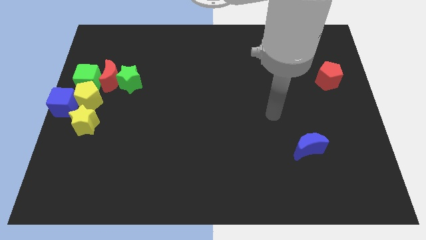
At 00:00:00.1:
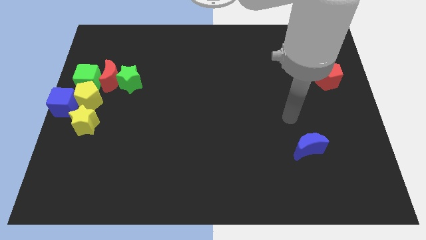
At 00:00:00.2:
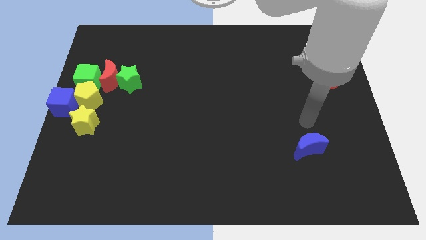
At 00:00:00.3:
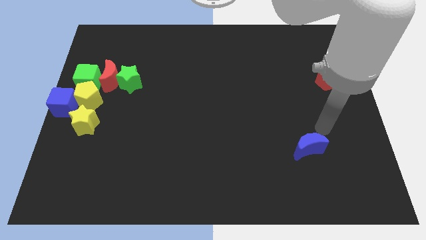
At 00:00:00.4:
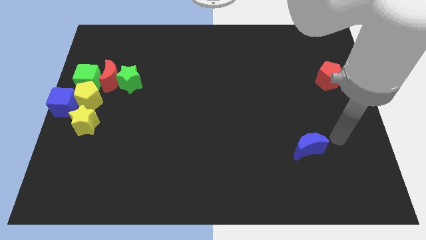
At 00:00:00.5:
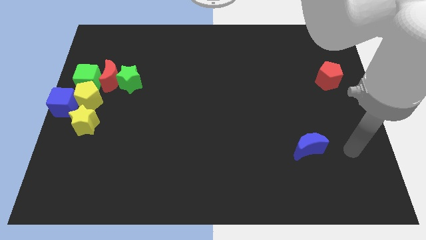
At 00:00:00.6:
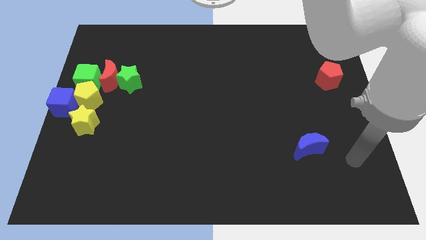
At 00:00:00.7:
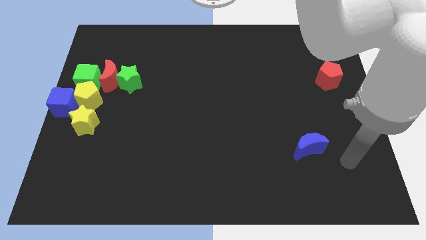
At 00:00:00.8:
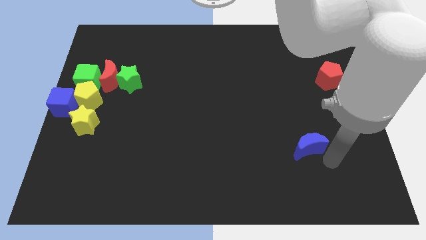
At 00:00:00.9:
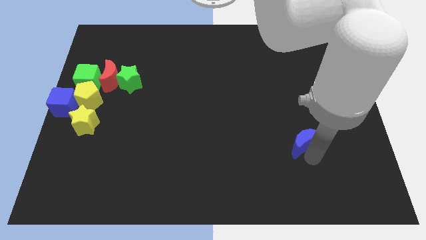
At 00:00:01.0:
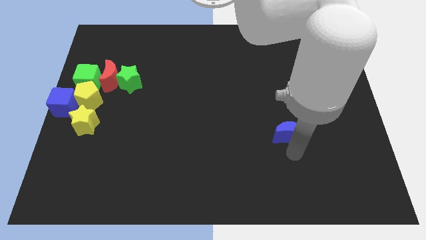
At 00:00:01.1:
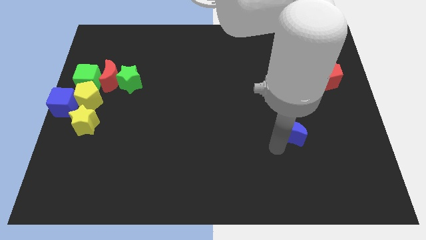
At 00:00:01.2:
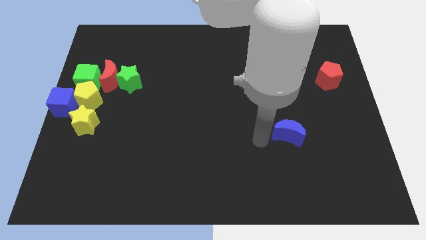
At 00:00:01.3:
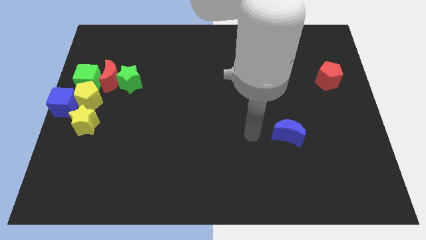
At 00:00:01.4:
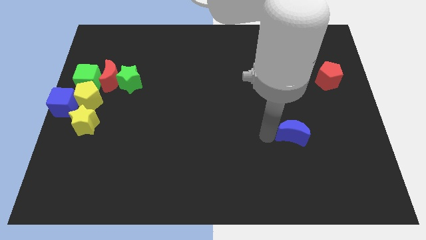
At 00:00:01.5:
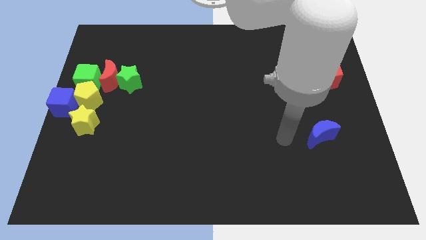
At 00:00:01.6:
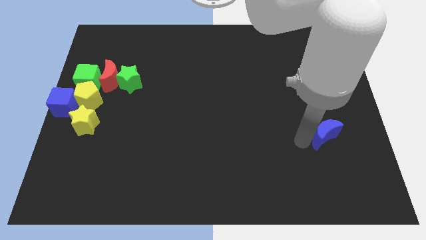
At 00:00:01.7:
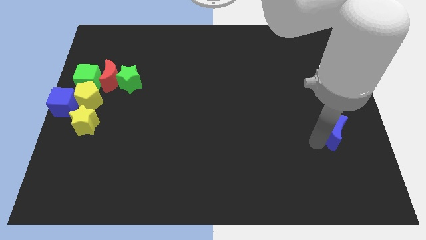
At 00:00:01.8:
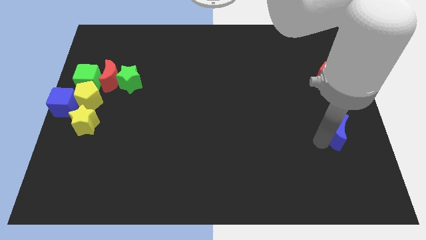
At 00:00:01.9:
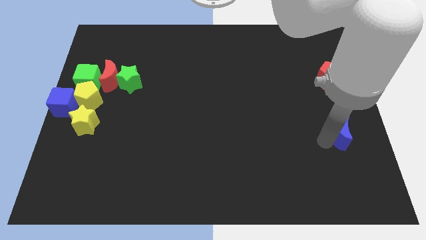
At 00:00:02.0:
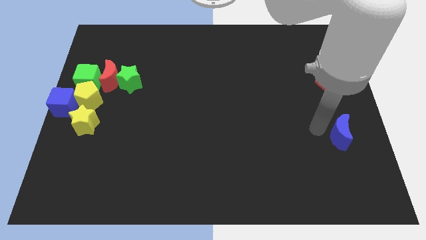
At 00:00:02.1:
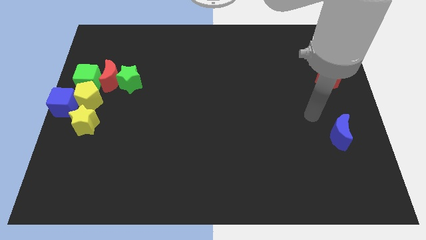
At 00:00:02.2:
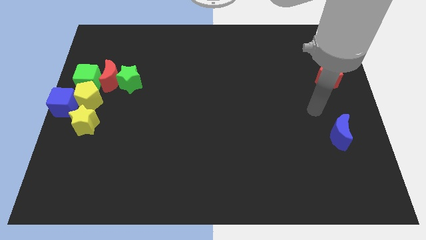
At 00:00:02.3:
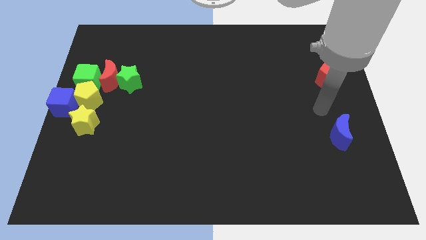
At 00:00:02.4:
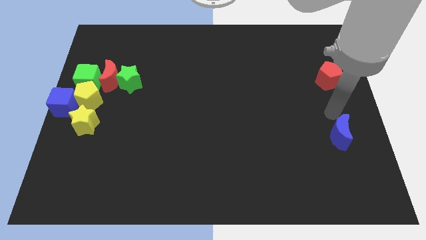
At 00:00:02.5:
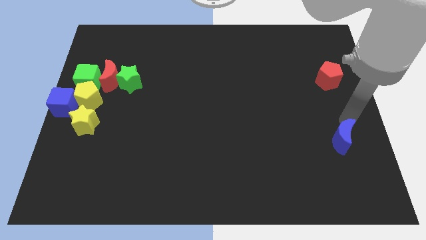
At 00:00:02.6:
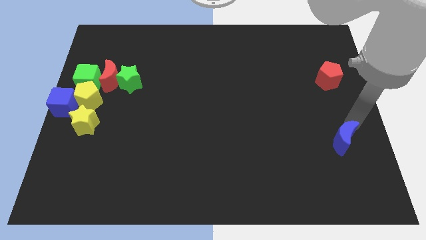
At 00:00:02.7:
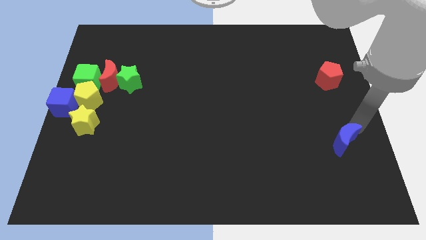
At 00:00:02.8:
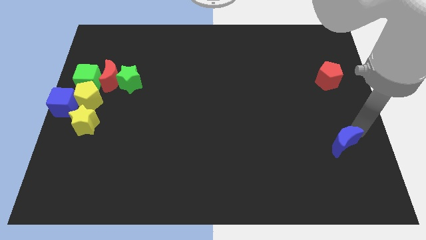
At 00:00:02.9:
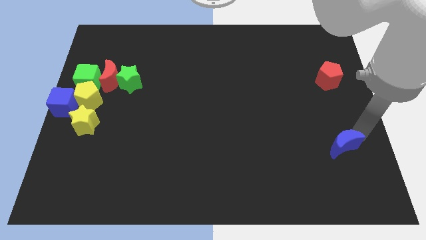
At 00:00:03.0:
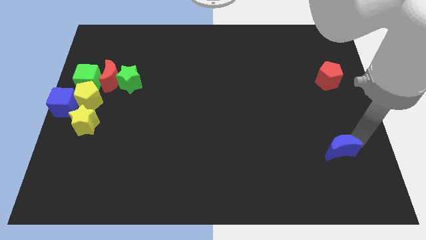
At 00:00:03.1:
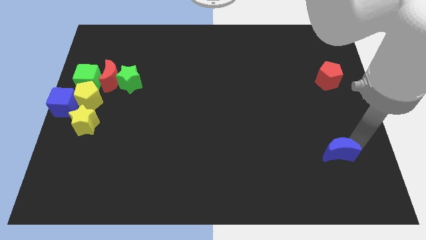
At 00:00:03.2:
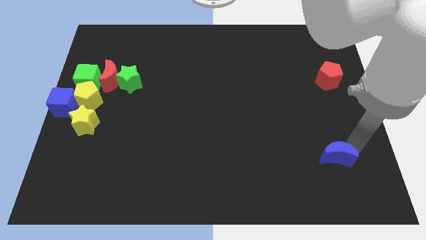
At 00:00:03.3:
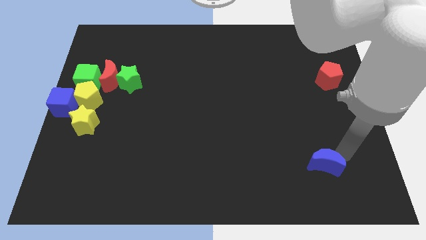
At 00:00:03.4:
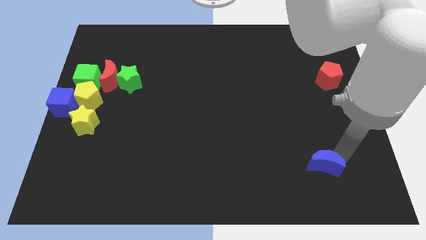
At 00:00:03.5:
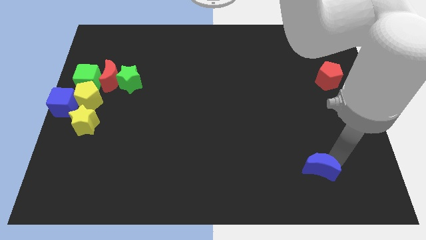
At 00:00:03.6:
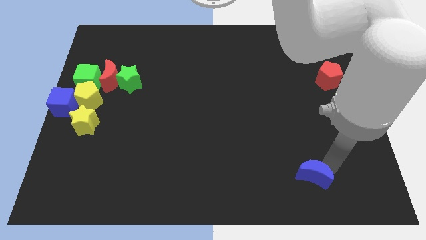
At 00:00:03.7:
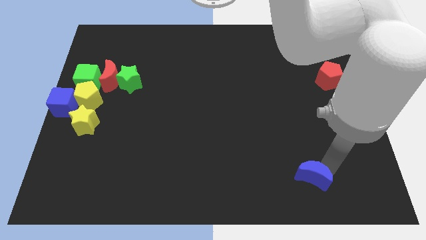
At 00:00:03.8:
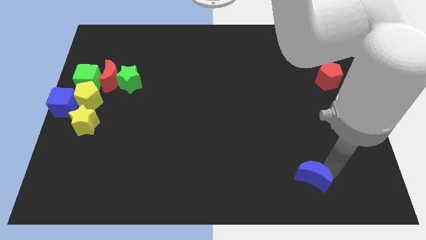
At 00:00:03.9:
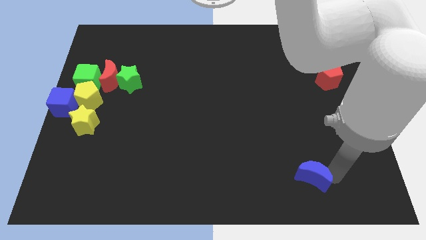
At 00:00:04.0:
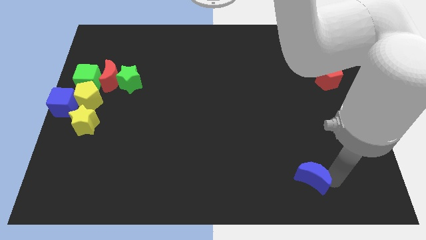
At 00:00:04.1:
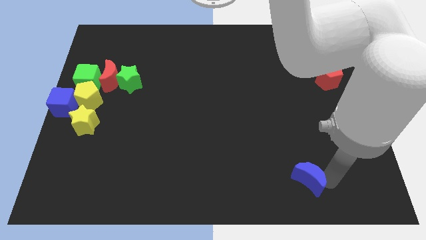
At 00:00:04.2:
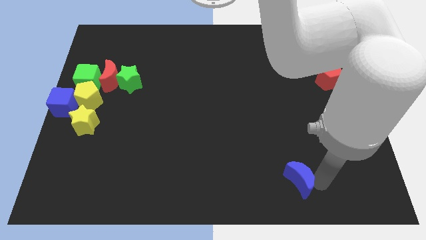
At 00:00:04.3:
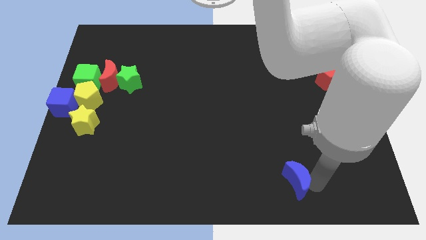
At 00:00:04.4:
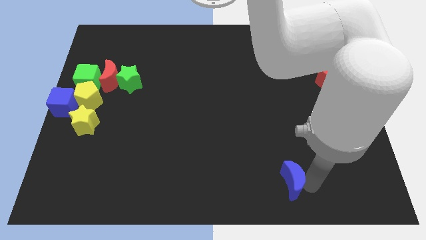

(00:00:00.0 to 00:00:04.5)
move the blue moon towards the bottom center

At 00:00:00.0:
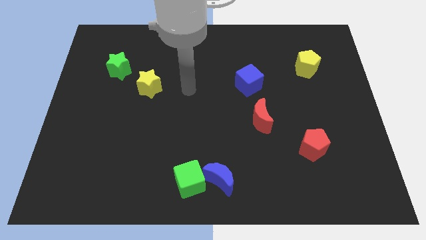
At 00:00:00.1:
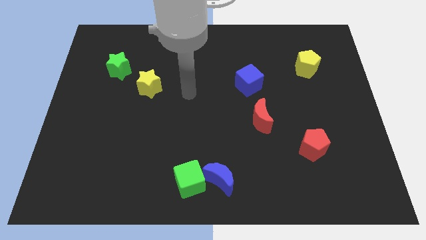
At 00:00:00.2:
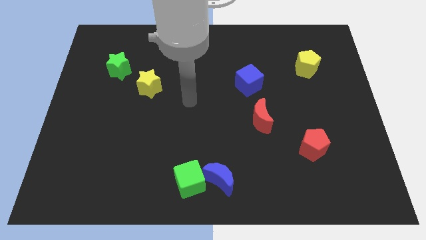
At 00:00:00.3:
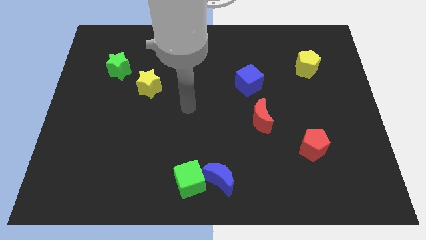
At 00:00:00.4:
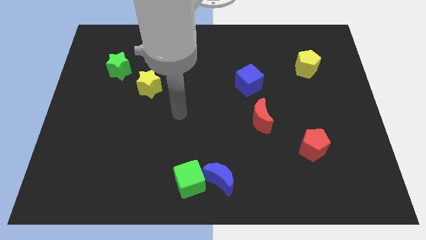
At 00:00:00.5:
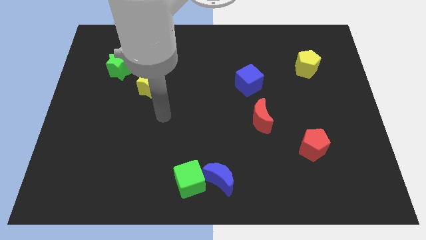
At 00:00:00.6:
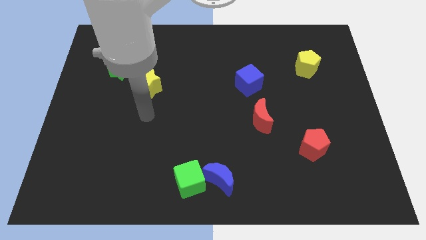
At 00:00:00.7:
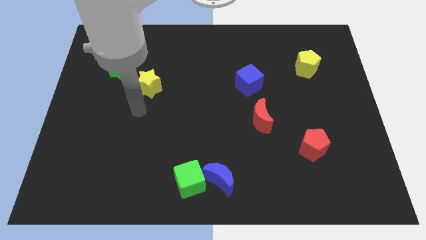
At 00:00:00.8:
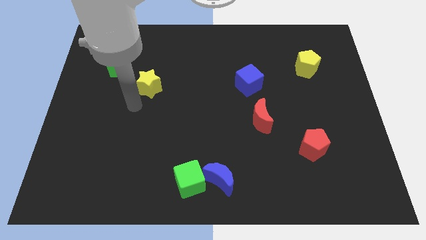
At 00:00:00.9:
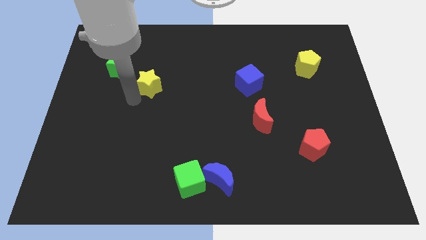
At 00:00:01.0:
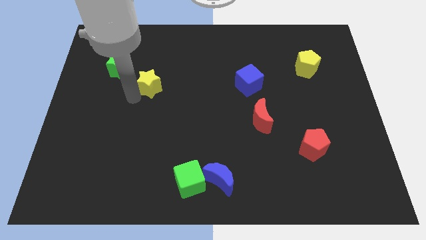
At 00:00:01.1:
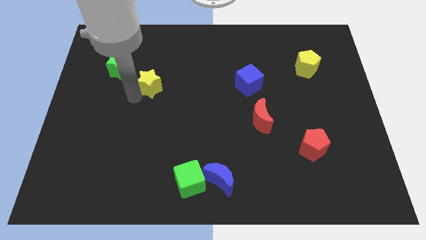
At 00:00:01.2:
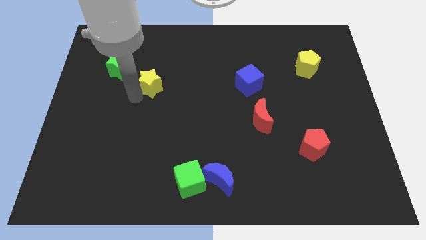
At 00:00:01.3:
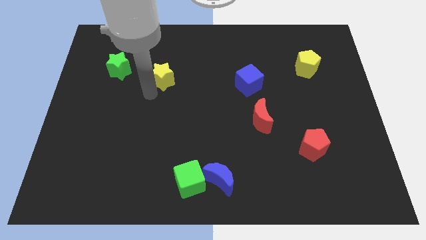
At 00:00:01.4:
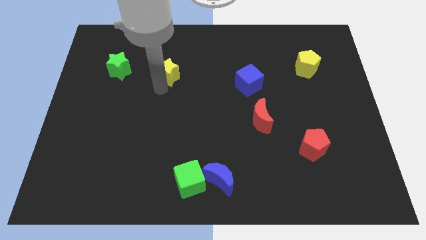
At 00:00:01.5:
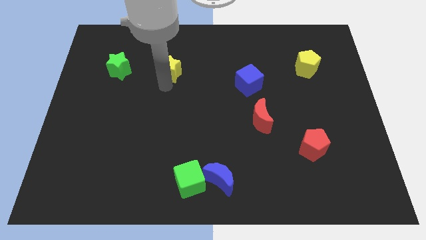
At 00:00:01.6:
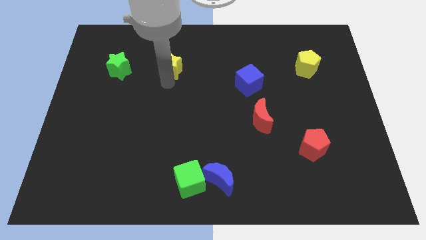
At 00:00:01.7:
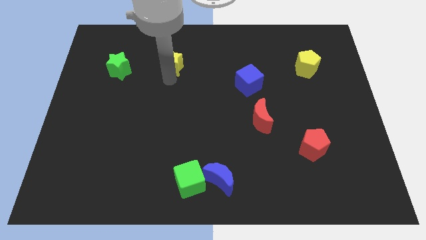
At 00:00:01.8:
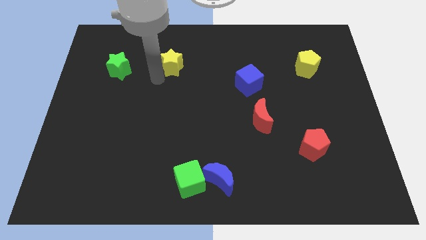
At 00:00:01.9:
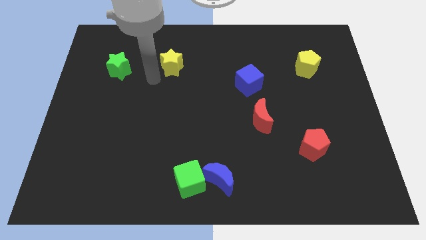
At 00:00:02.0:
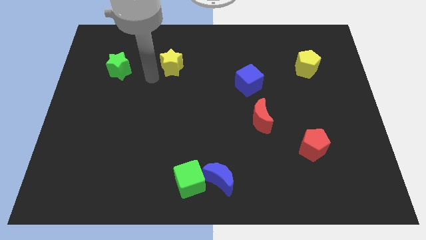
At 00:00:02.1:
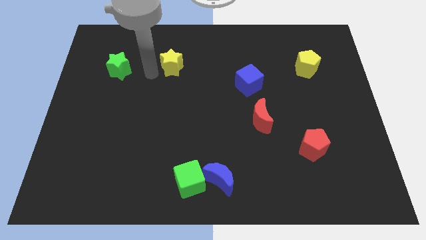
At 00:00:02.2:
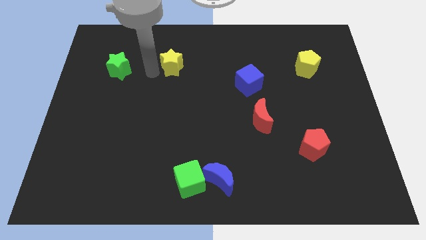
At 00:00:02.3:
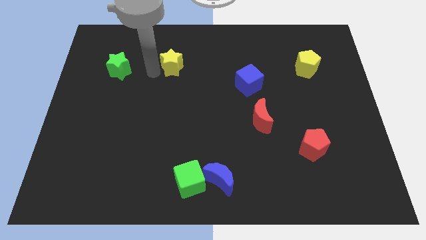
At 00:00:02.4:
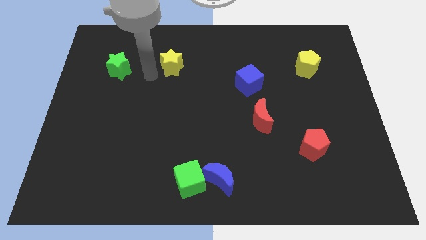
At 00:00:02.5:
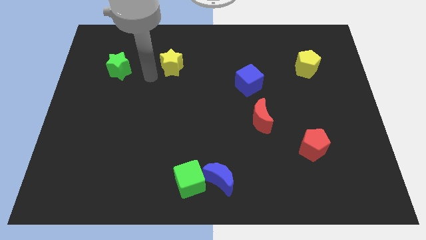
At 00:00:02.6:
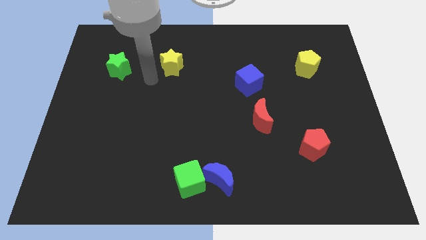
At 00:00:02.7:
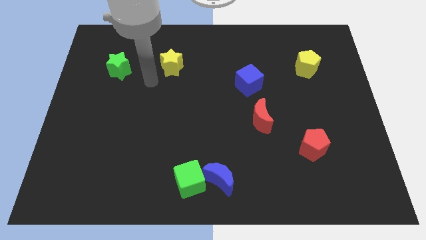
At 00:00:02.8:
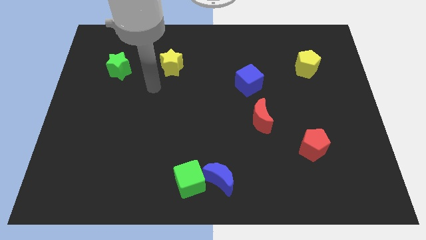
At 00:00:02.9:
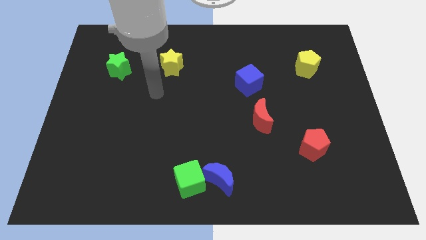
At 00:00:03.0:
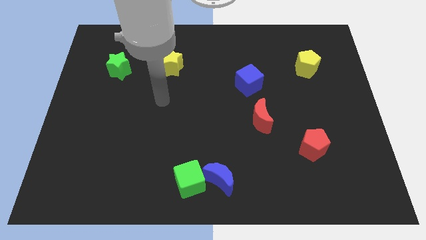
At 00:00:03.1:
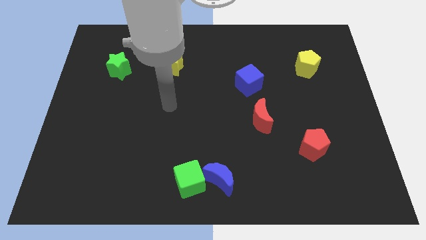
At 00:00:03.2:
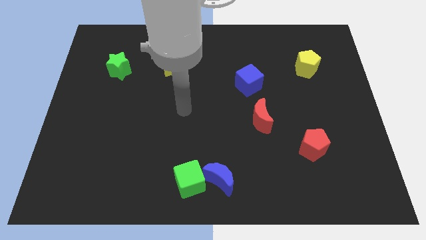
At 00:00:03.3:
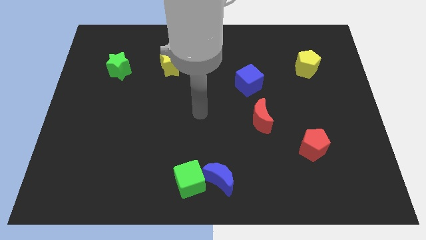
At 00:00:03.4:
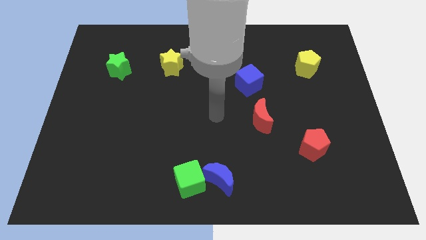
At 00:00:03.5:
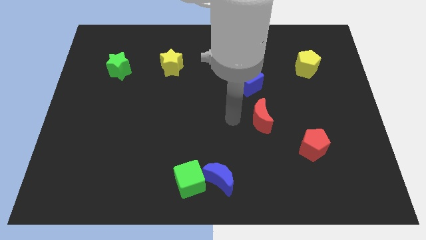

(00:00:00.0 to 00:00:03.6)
move the yellow star slightly up

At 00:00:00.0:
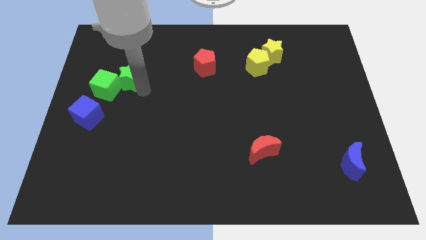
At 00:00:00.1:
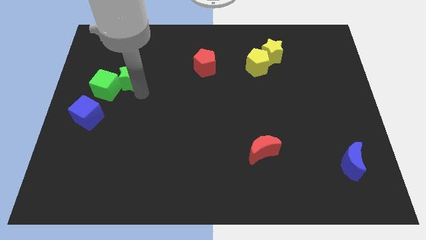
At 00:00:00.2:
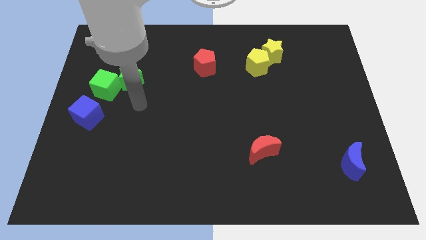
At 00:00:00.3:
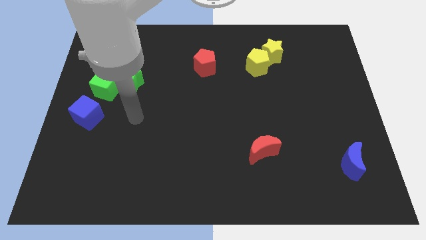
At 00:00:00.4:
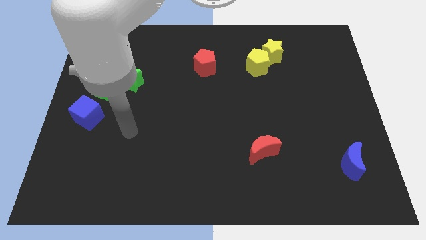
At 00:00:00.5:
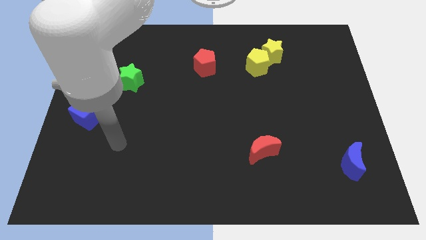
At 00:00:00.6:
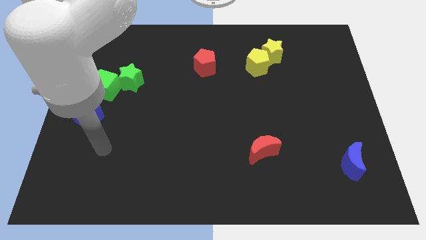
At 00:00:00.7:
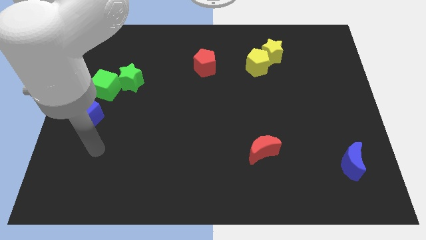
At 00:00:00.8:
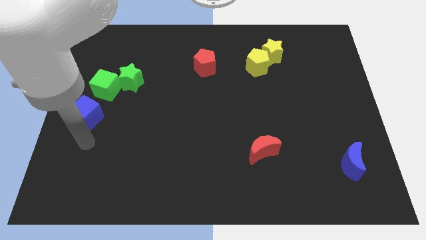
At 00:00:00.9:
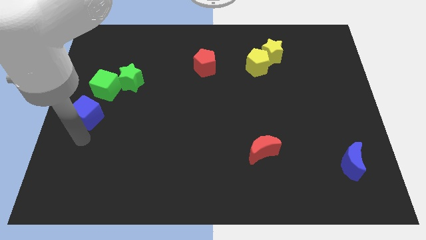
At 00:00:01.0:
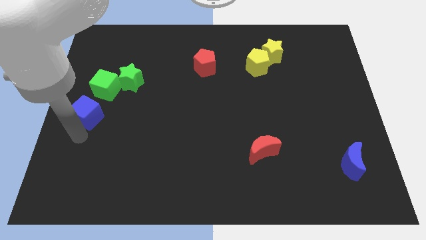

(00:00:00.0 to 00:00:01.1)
place your arm to the bottom of the blue cube
